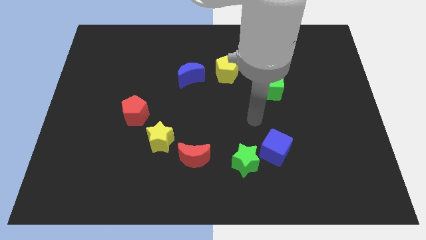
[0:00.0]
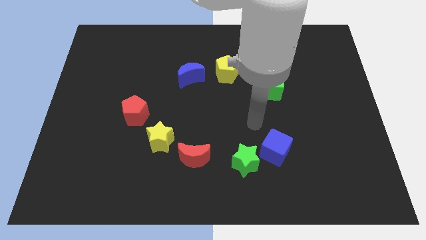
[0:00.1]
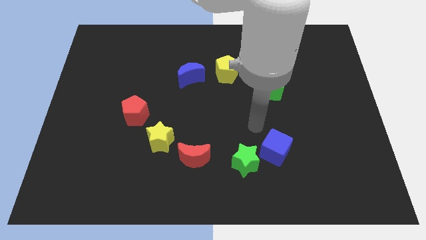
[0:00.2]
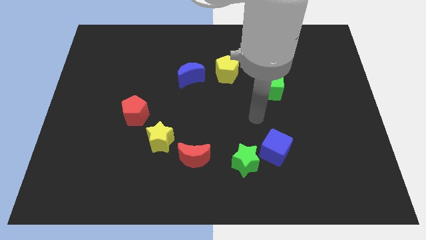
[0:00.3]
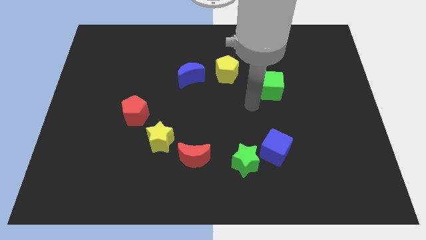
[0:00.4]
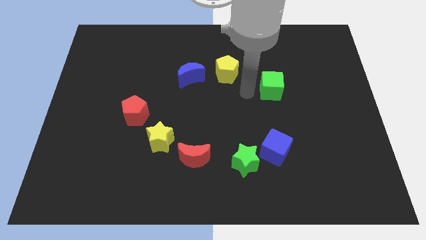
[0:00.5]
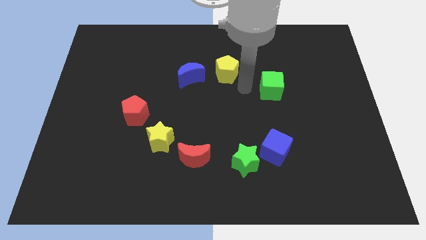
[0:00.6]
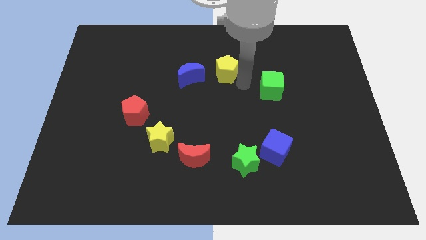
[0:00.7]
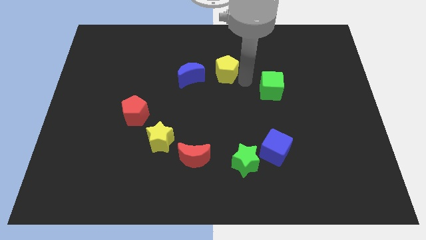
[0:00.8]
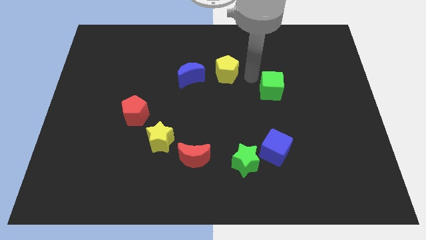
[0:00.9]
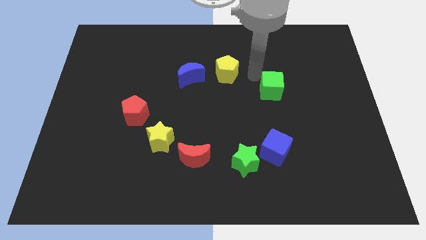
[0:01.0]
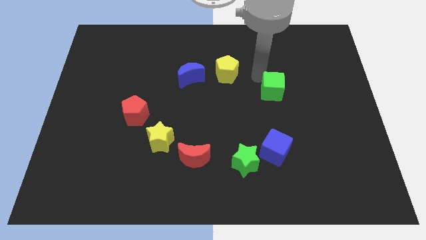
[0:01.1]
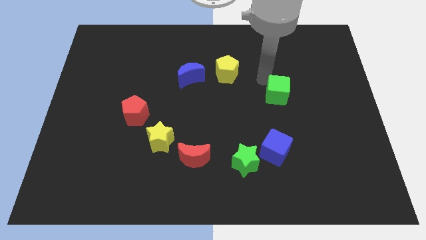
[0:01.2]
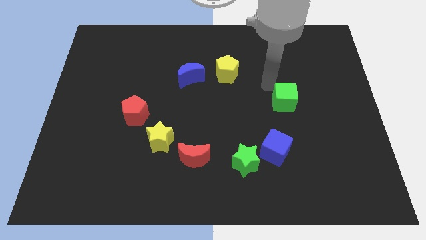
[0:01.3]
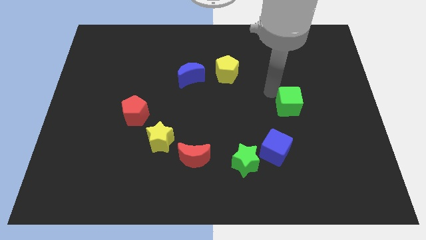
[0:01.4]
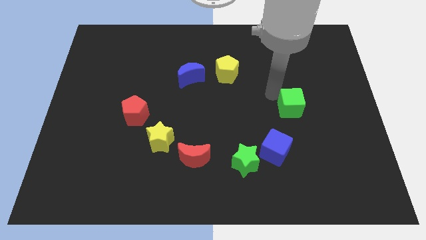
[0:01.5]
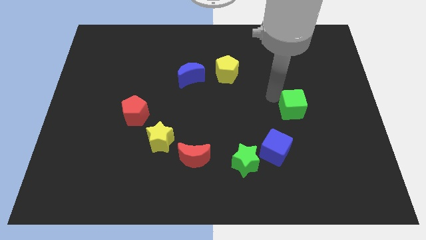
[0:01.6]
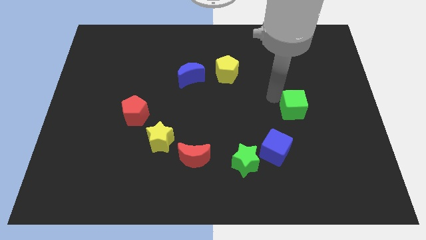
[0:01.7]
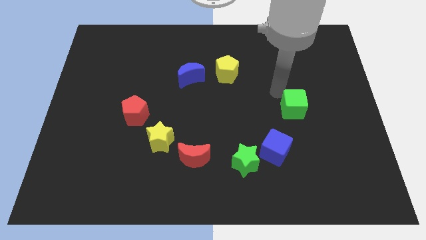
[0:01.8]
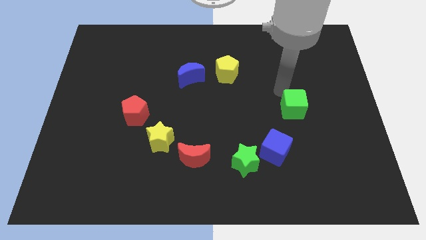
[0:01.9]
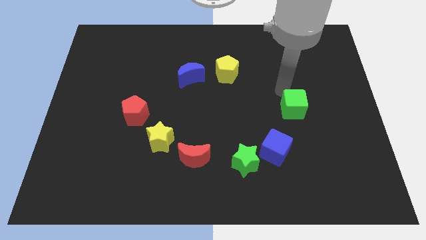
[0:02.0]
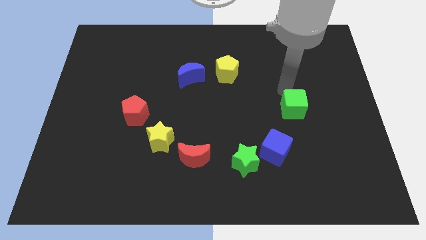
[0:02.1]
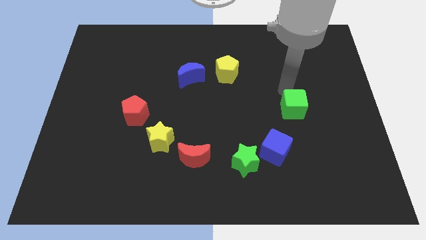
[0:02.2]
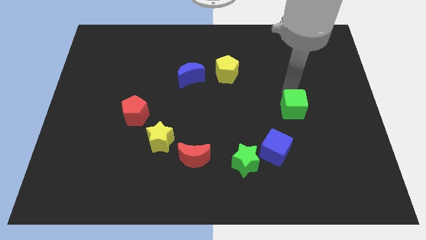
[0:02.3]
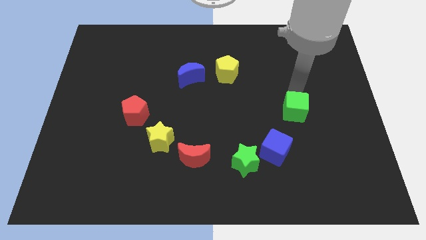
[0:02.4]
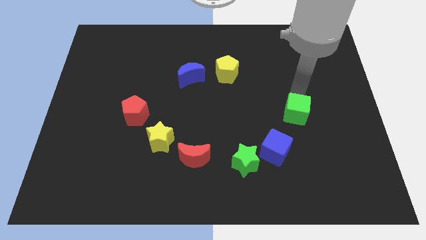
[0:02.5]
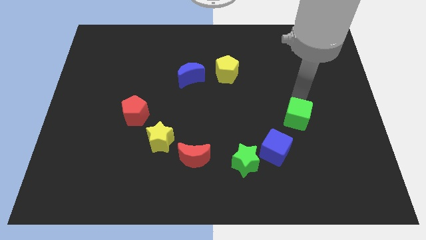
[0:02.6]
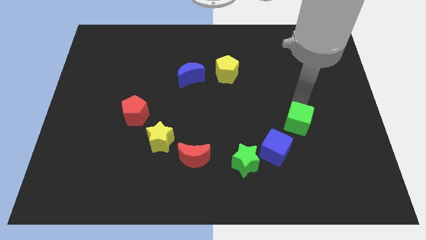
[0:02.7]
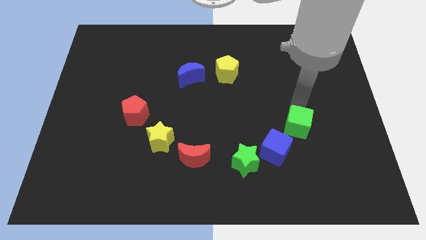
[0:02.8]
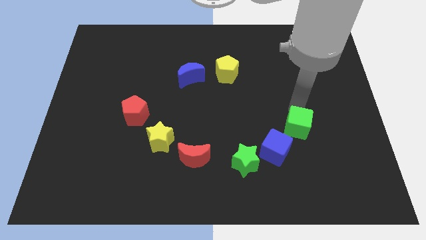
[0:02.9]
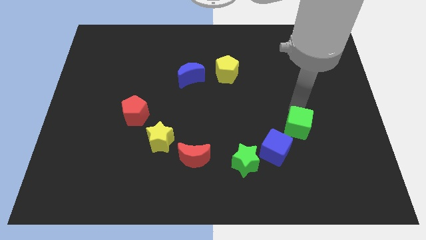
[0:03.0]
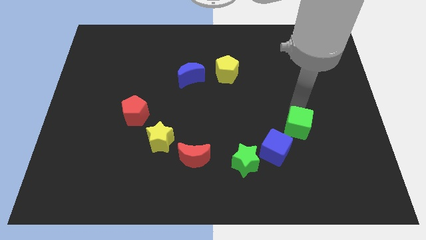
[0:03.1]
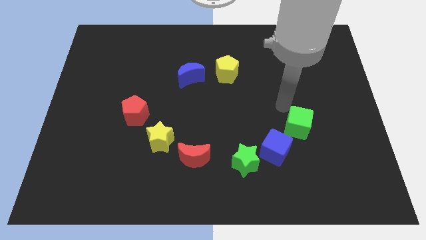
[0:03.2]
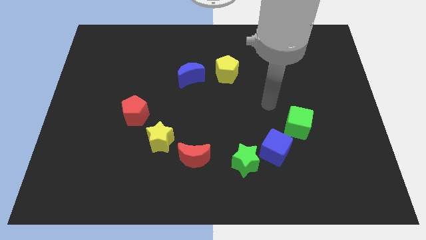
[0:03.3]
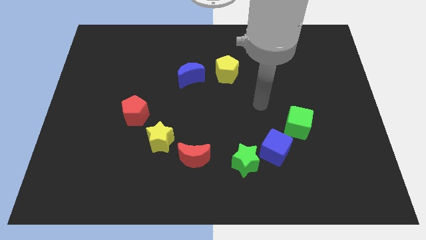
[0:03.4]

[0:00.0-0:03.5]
push the green cube diagonally top right to blue cube

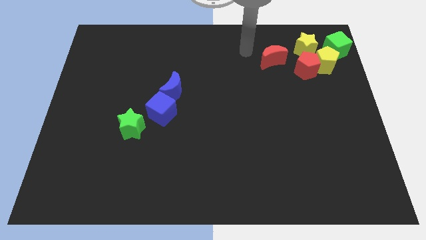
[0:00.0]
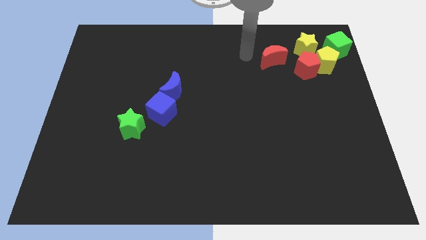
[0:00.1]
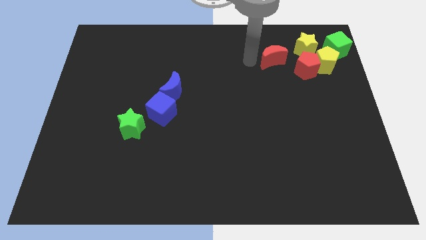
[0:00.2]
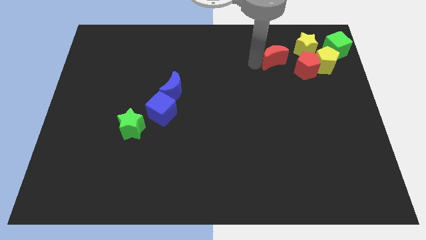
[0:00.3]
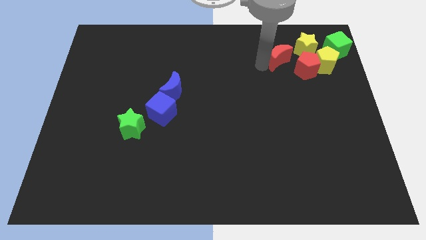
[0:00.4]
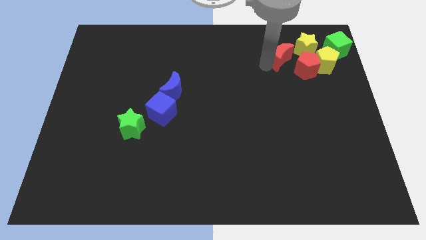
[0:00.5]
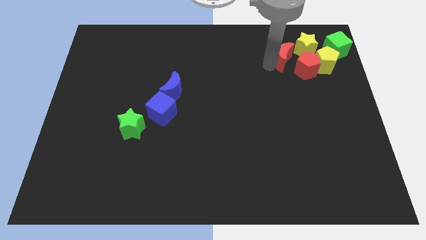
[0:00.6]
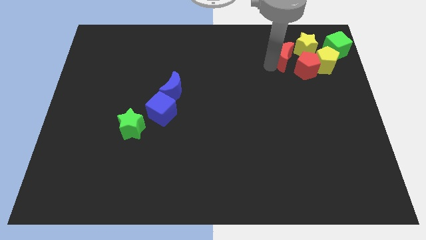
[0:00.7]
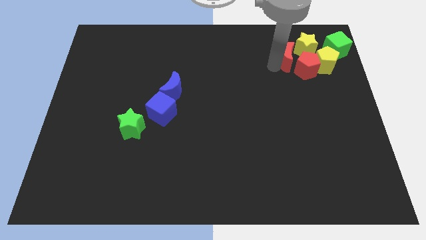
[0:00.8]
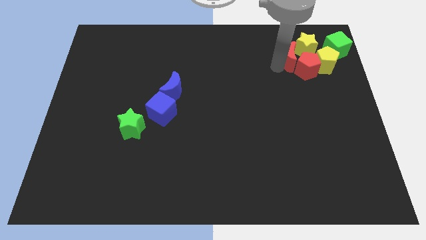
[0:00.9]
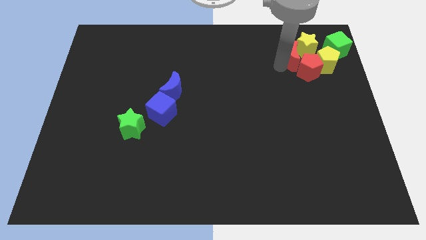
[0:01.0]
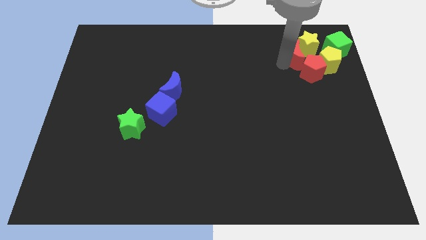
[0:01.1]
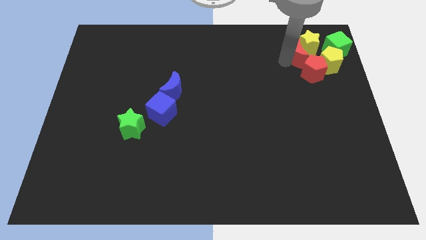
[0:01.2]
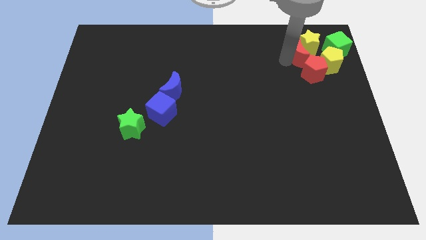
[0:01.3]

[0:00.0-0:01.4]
place the red moon above the red pentagon

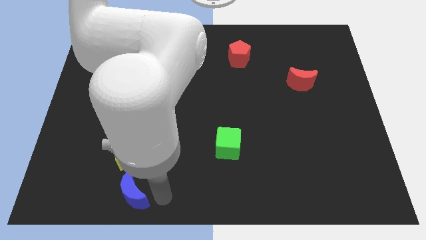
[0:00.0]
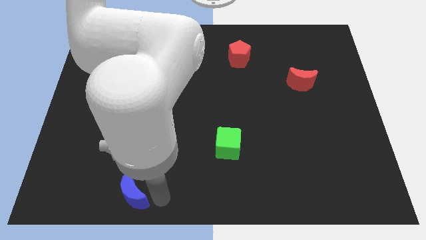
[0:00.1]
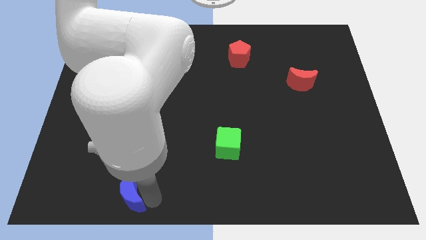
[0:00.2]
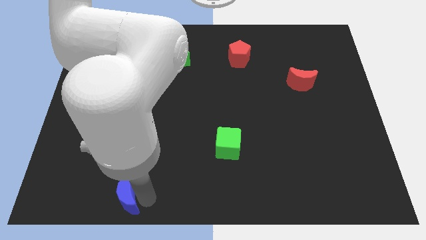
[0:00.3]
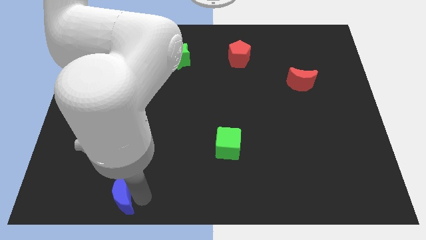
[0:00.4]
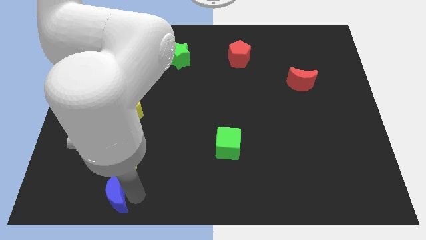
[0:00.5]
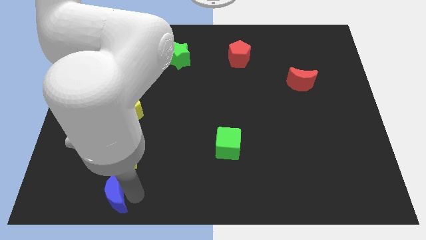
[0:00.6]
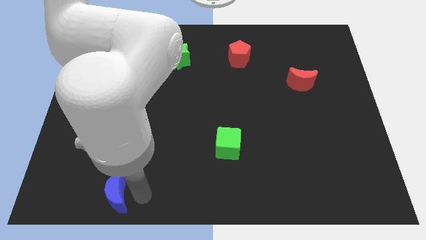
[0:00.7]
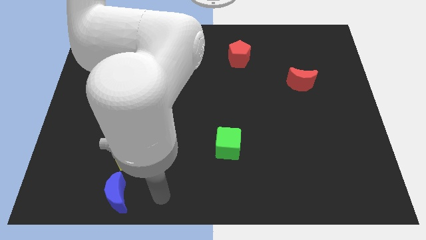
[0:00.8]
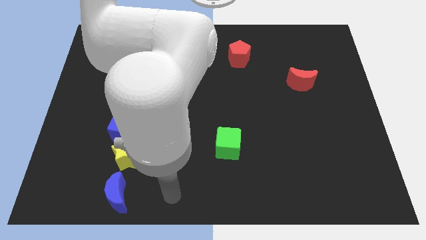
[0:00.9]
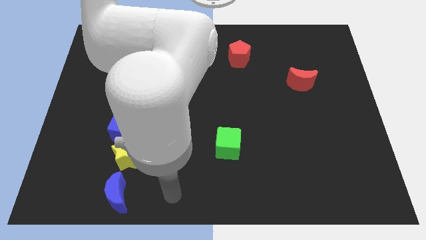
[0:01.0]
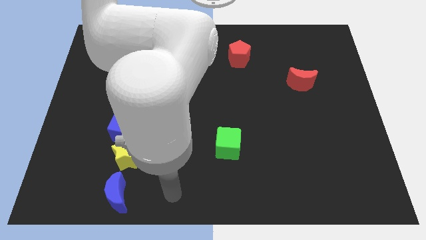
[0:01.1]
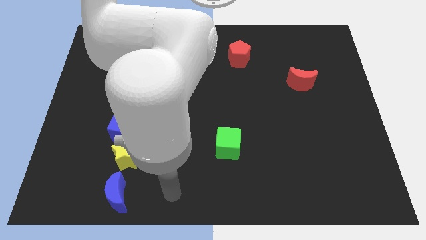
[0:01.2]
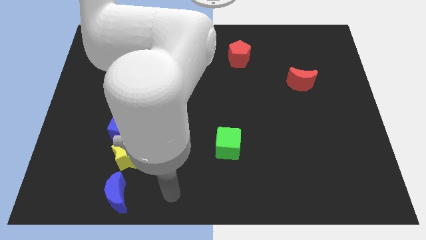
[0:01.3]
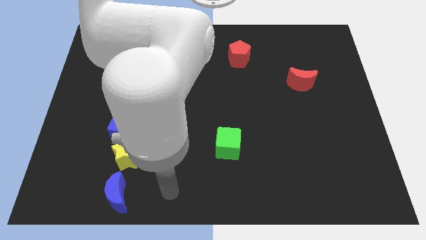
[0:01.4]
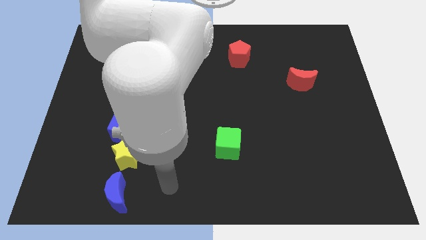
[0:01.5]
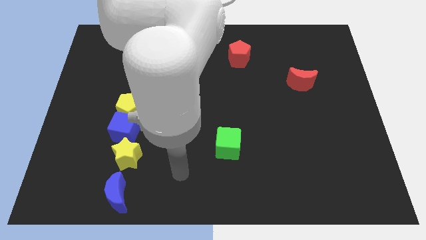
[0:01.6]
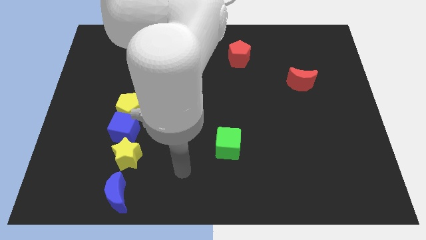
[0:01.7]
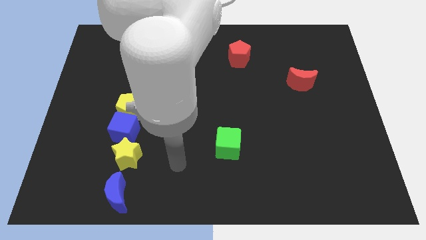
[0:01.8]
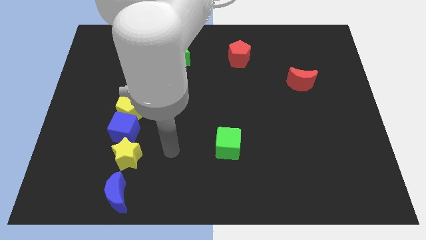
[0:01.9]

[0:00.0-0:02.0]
place your ram in between the yellow star and green cube

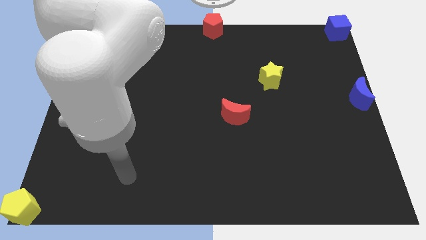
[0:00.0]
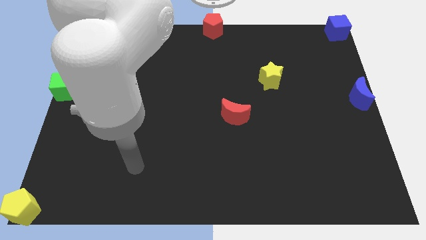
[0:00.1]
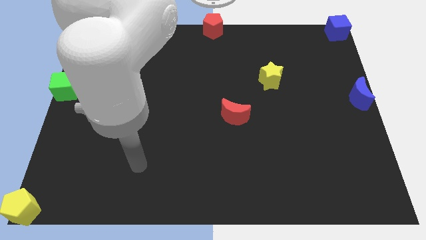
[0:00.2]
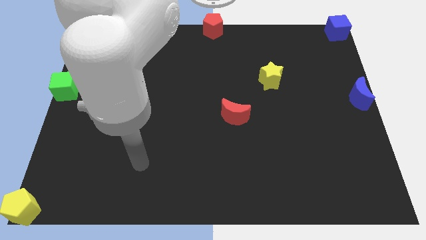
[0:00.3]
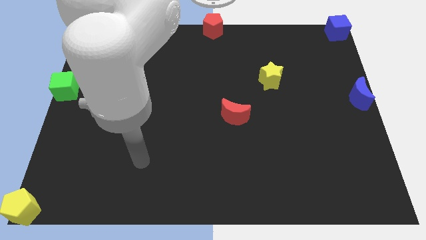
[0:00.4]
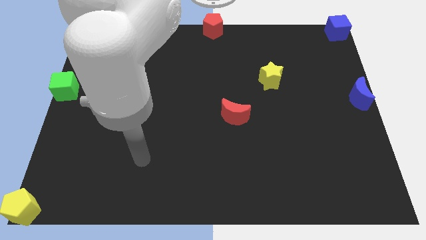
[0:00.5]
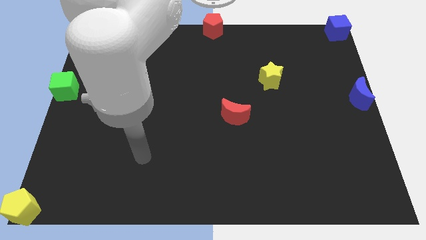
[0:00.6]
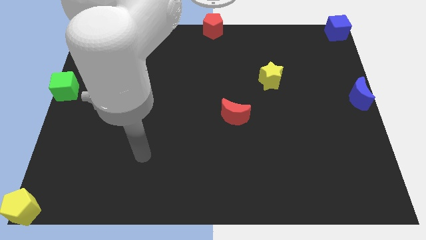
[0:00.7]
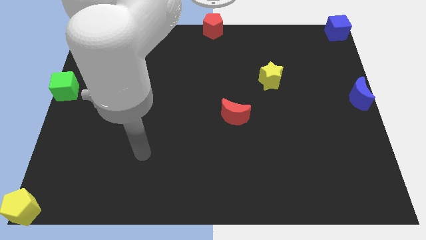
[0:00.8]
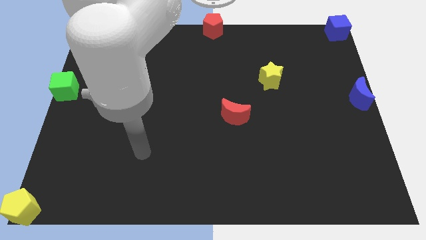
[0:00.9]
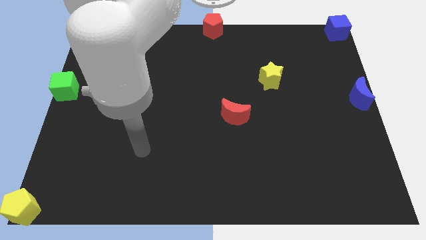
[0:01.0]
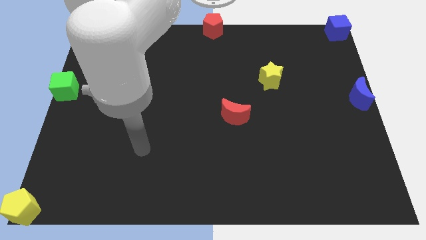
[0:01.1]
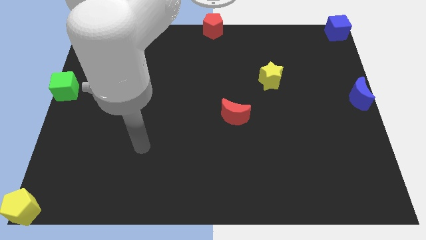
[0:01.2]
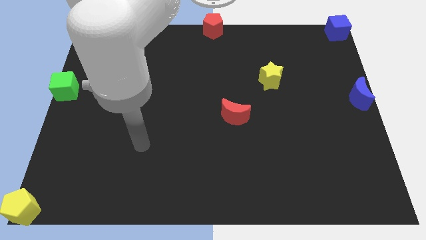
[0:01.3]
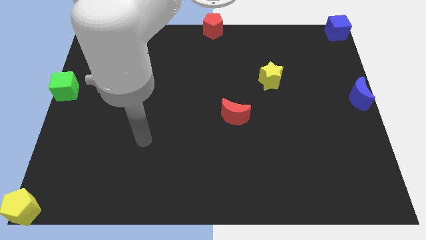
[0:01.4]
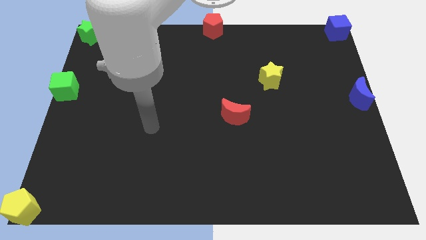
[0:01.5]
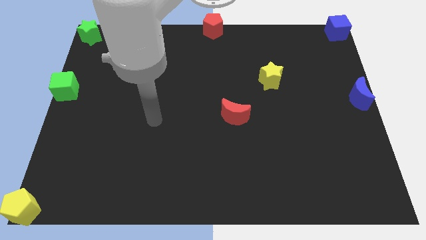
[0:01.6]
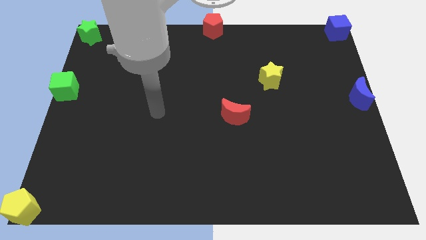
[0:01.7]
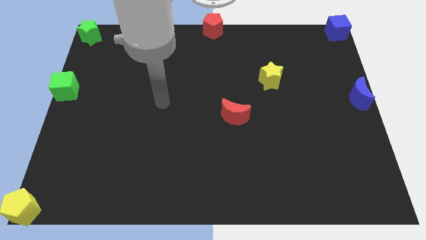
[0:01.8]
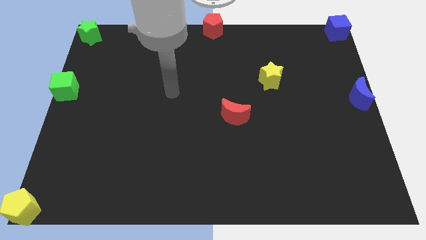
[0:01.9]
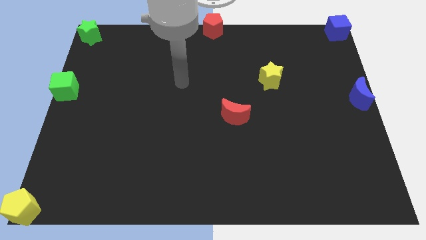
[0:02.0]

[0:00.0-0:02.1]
place the arm diagonally to the red moon
